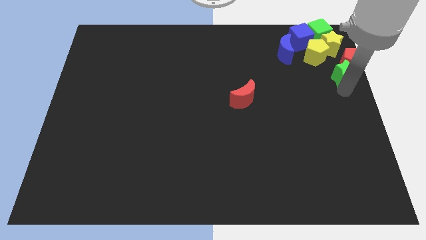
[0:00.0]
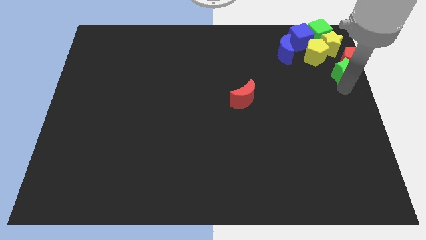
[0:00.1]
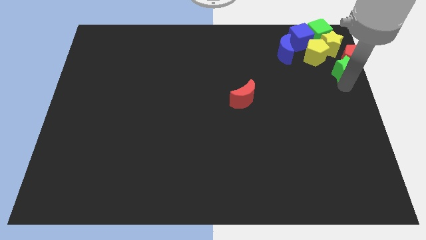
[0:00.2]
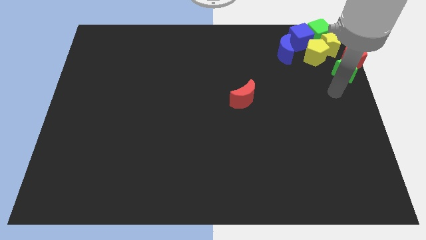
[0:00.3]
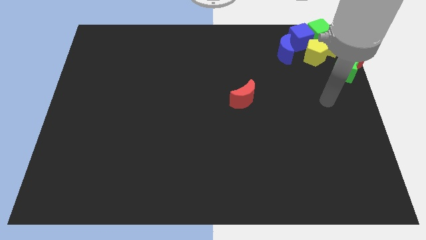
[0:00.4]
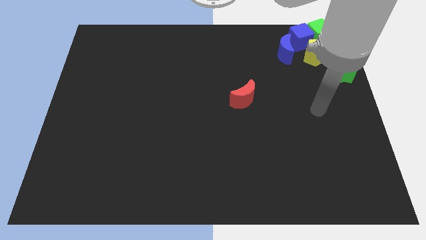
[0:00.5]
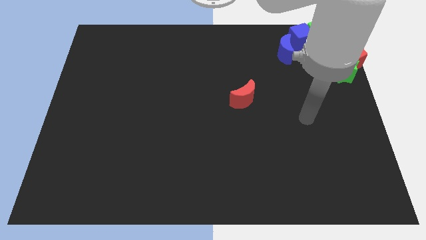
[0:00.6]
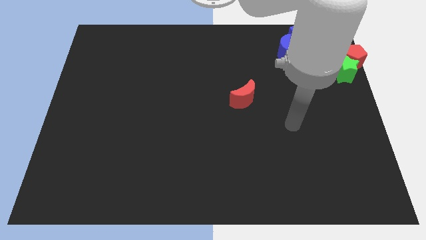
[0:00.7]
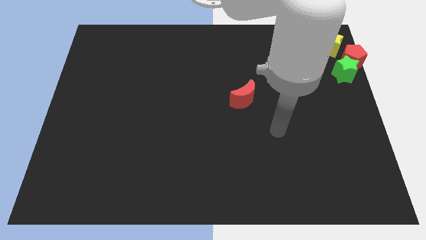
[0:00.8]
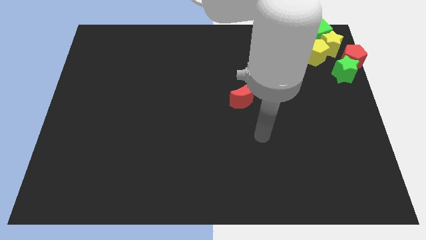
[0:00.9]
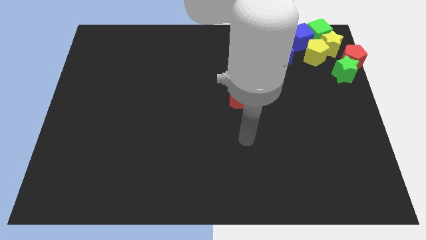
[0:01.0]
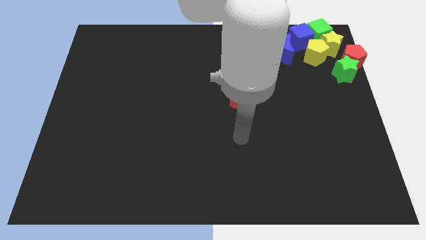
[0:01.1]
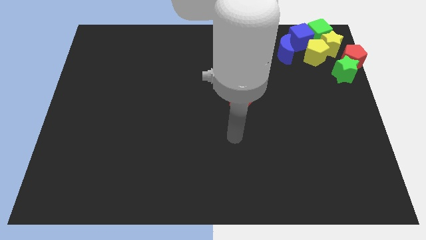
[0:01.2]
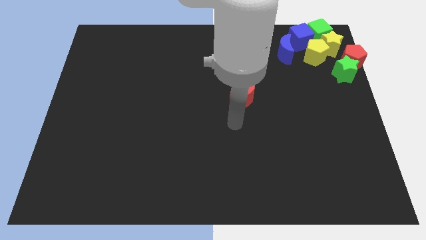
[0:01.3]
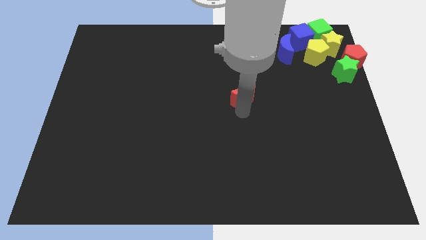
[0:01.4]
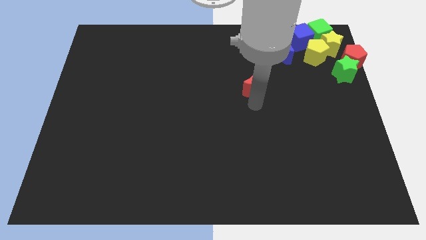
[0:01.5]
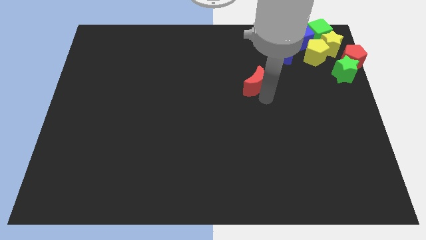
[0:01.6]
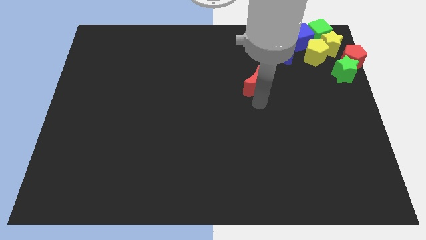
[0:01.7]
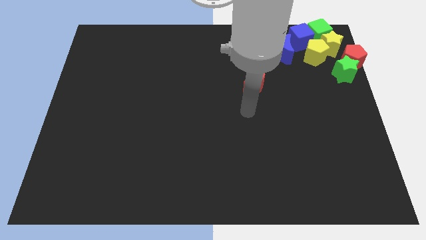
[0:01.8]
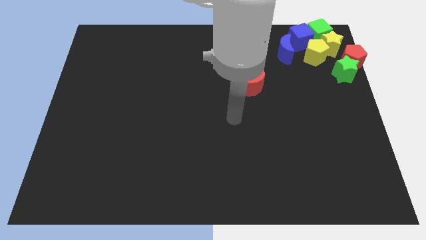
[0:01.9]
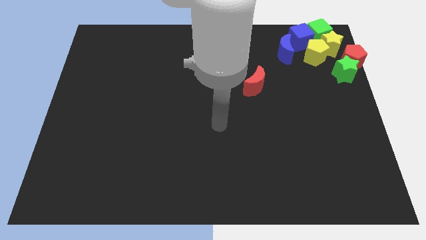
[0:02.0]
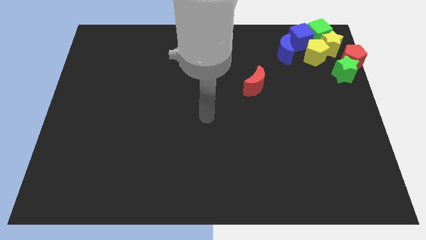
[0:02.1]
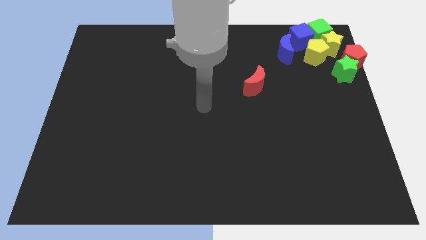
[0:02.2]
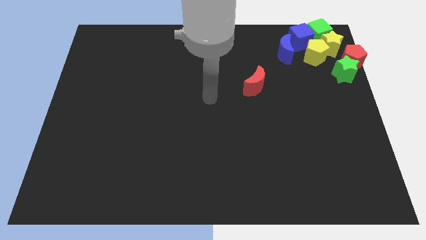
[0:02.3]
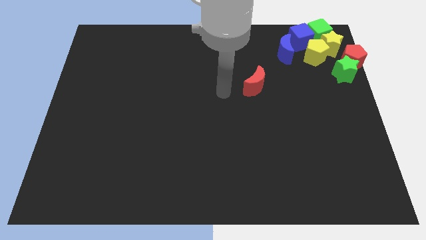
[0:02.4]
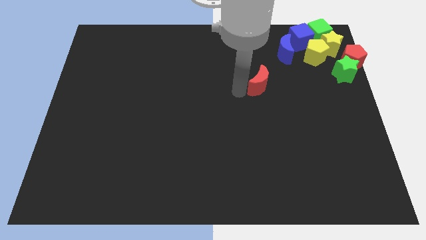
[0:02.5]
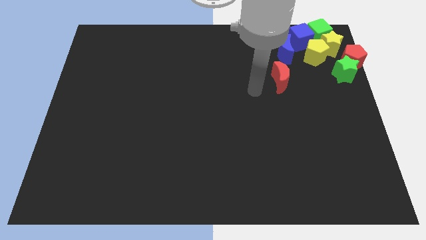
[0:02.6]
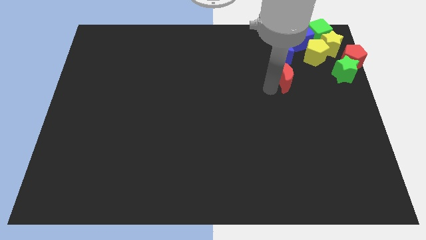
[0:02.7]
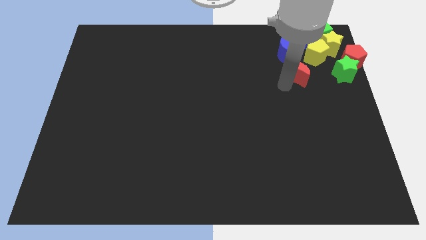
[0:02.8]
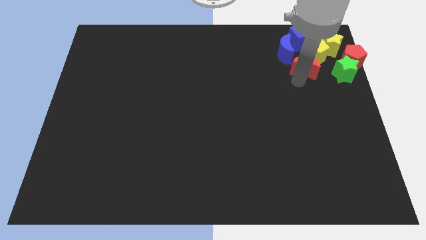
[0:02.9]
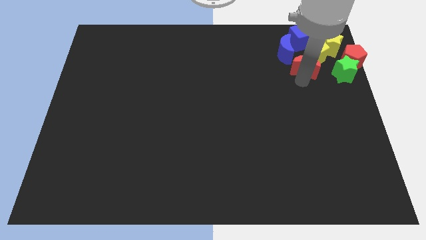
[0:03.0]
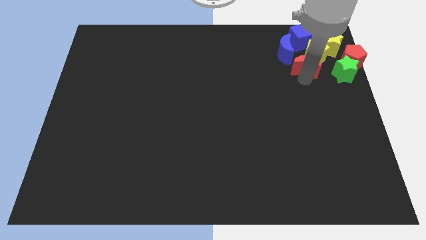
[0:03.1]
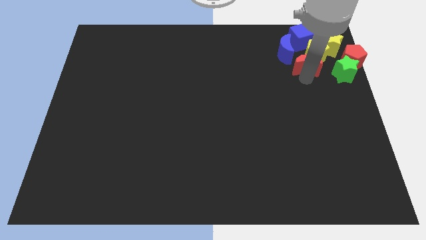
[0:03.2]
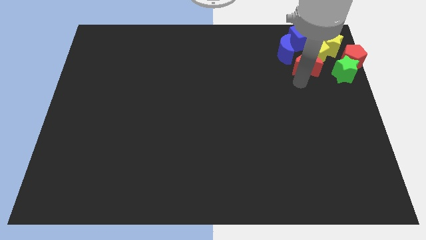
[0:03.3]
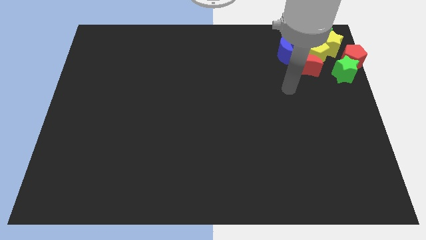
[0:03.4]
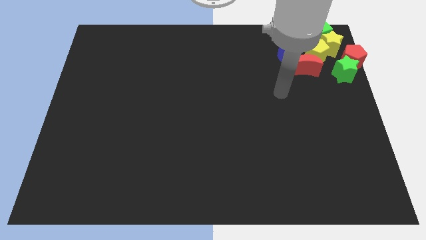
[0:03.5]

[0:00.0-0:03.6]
move the red moon close to the yellow pentagon

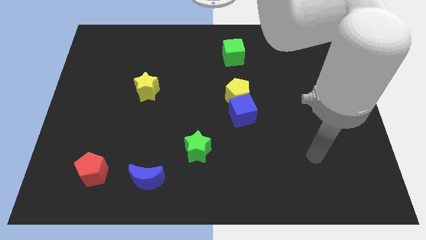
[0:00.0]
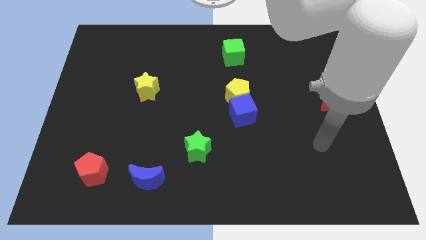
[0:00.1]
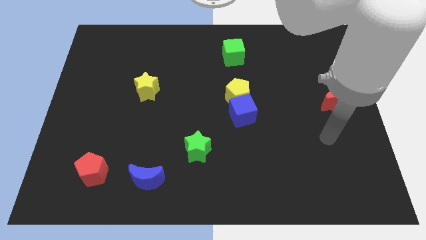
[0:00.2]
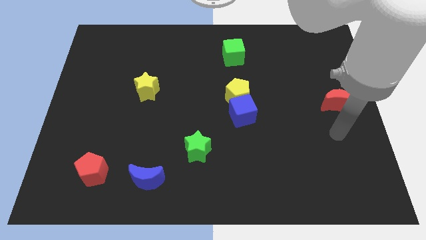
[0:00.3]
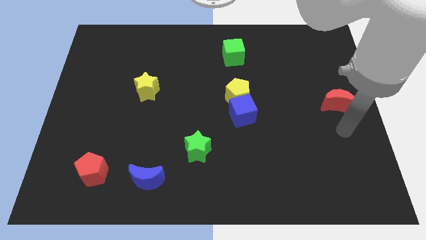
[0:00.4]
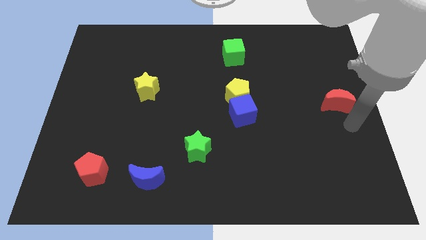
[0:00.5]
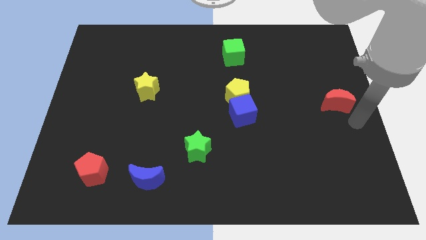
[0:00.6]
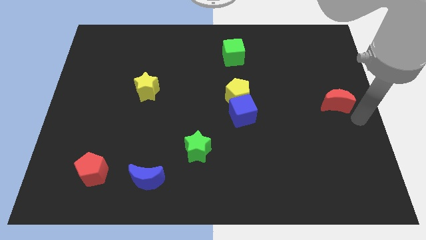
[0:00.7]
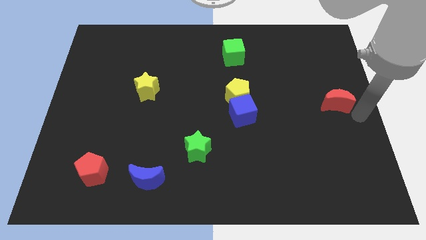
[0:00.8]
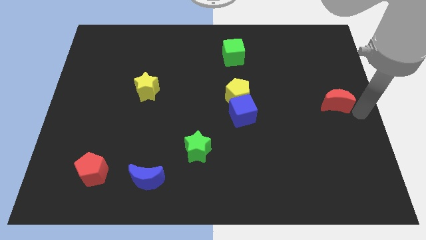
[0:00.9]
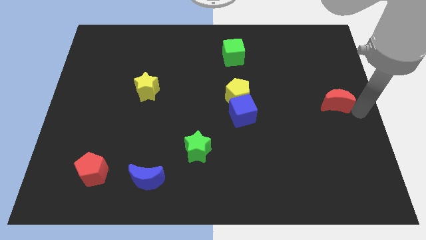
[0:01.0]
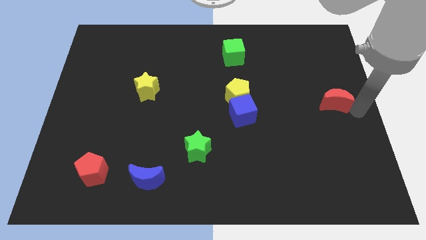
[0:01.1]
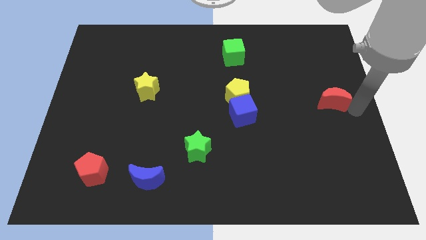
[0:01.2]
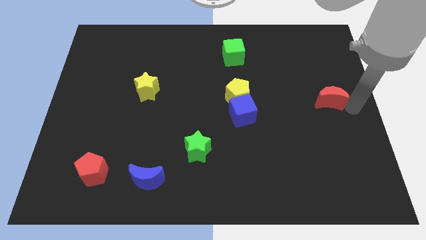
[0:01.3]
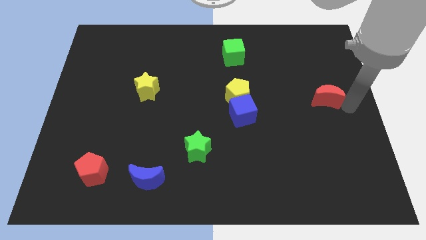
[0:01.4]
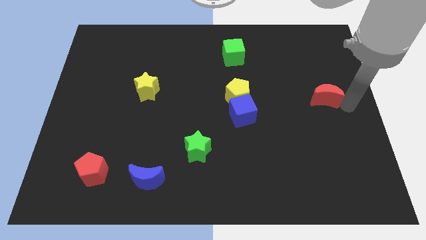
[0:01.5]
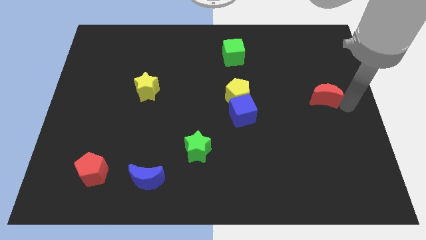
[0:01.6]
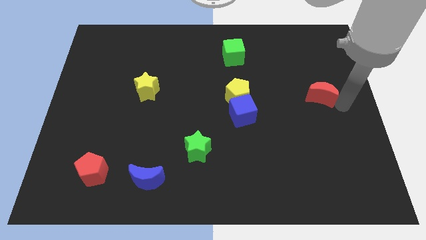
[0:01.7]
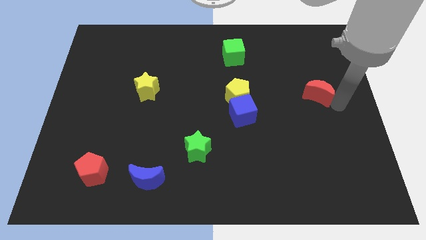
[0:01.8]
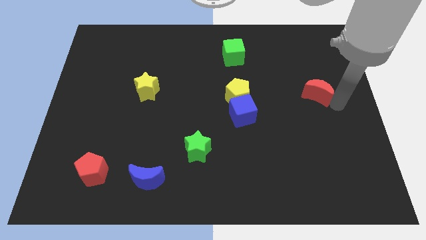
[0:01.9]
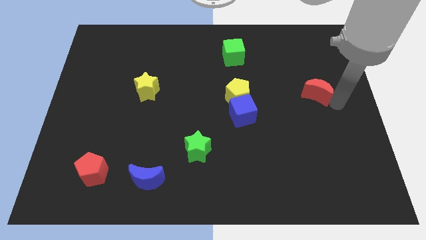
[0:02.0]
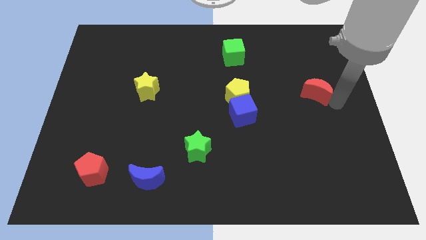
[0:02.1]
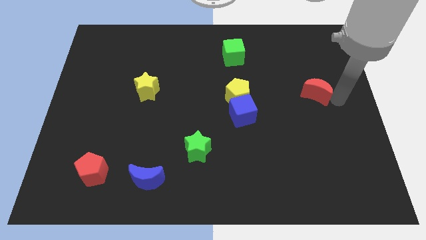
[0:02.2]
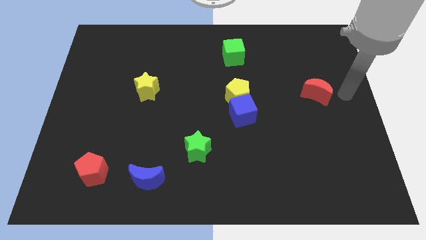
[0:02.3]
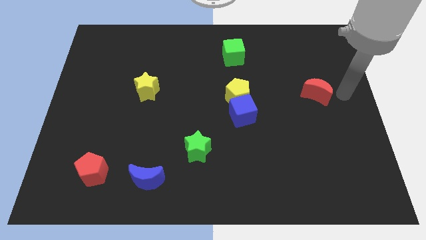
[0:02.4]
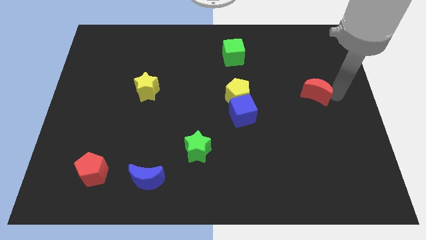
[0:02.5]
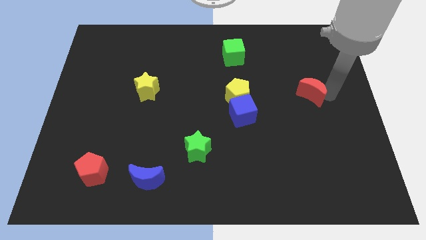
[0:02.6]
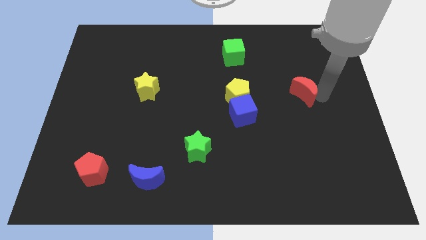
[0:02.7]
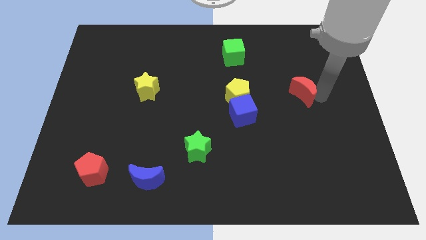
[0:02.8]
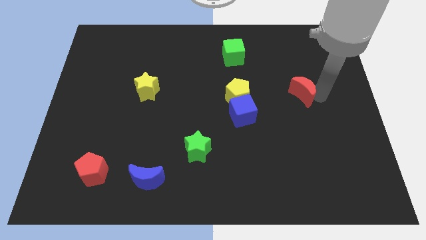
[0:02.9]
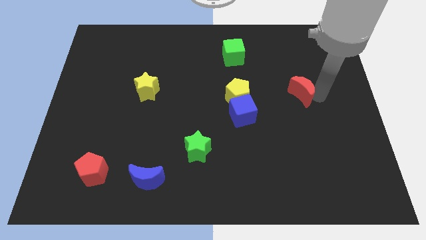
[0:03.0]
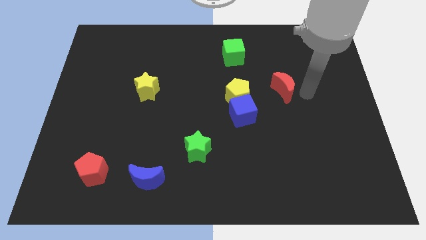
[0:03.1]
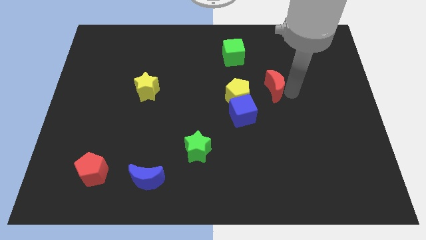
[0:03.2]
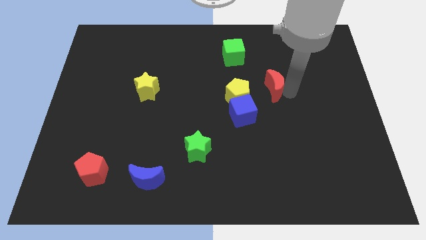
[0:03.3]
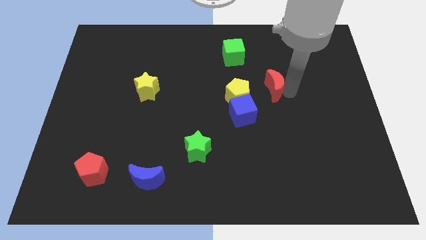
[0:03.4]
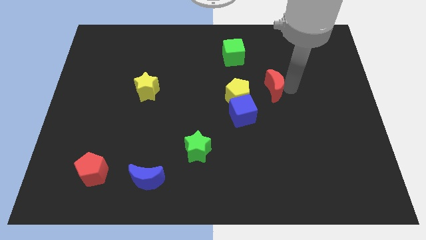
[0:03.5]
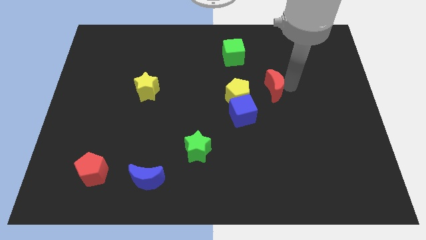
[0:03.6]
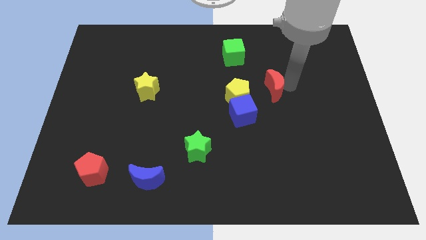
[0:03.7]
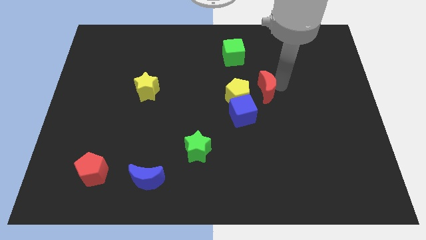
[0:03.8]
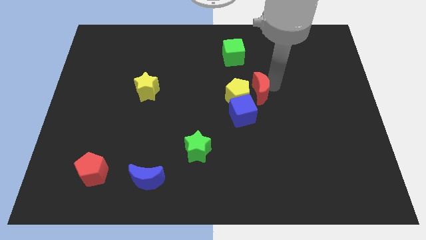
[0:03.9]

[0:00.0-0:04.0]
move the red crescent close to the yellow star

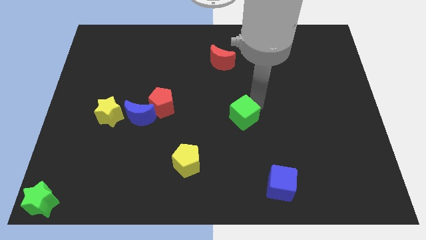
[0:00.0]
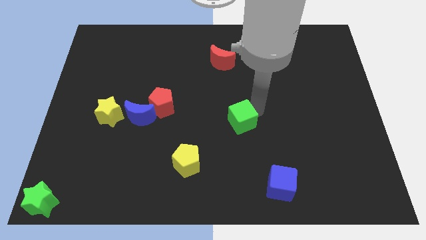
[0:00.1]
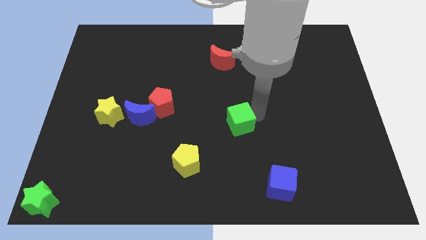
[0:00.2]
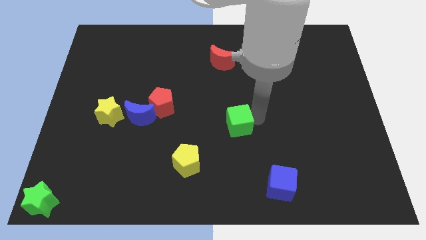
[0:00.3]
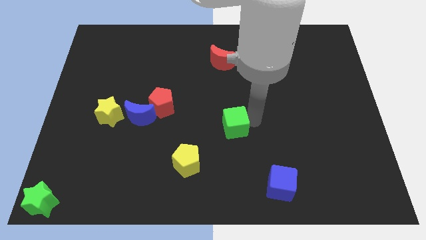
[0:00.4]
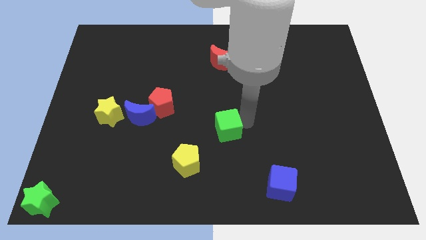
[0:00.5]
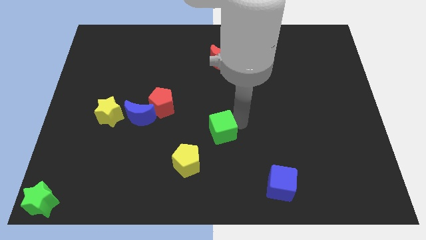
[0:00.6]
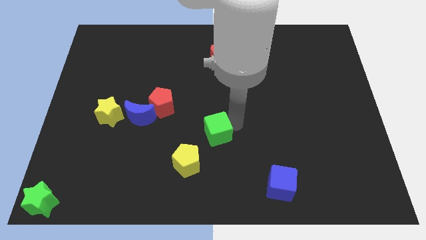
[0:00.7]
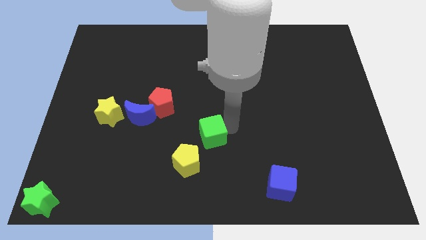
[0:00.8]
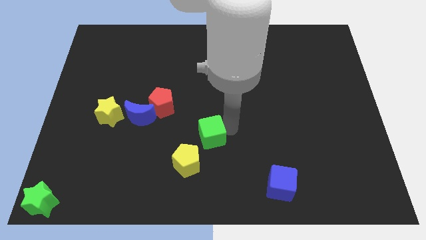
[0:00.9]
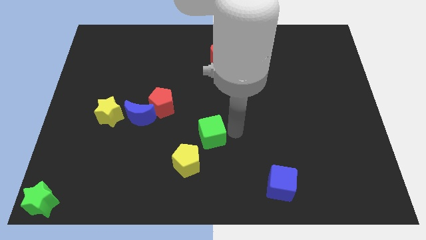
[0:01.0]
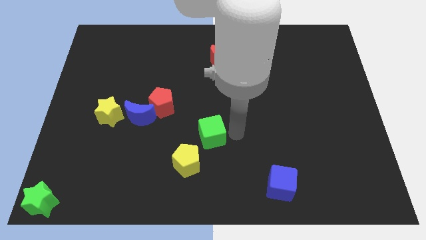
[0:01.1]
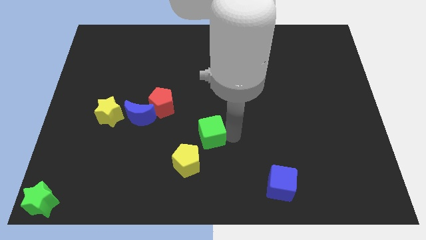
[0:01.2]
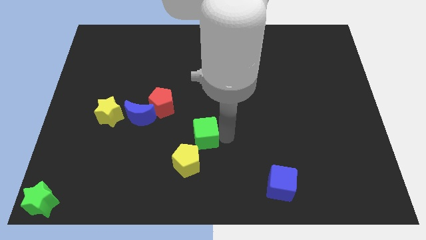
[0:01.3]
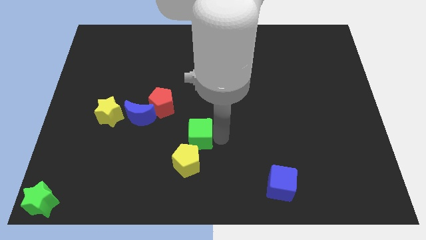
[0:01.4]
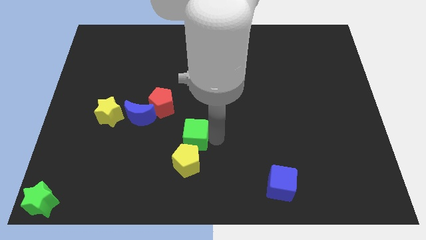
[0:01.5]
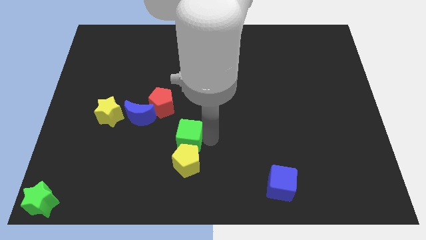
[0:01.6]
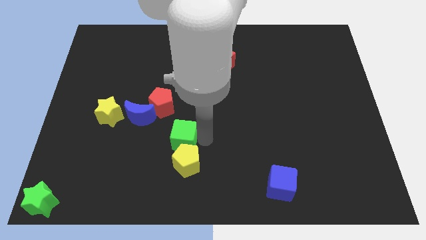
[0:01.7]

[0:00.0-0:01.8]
push the green cube to the top of yellow pentagon
